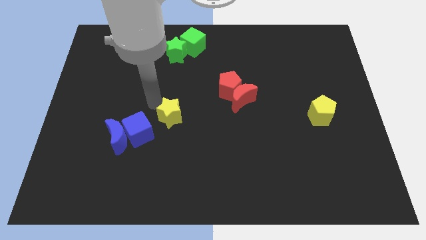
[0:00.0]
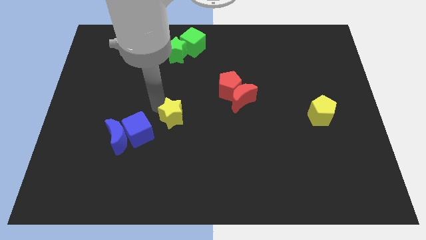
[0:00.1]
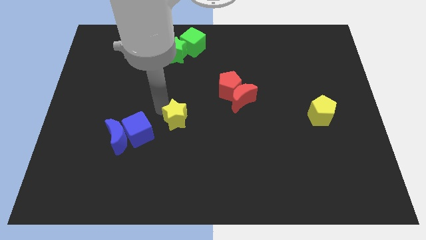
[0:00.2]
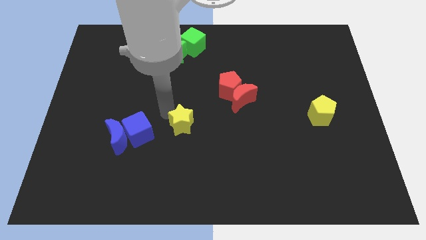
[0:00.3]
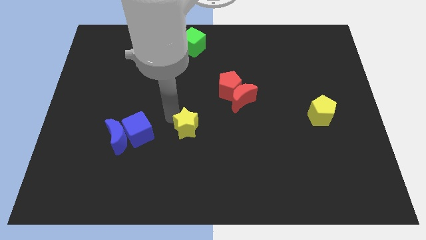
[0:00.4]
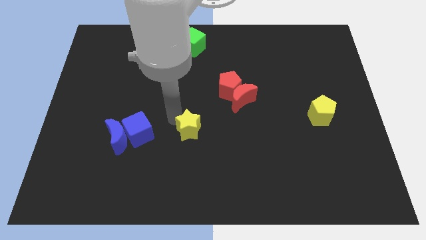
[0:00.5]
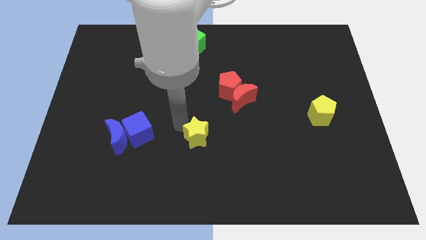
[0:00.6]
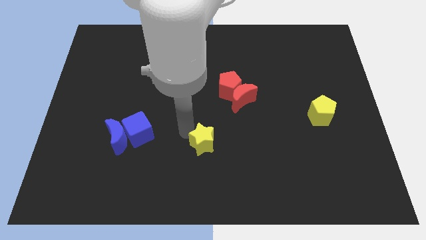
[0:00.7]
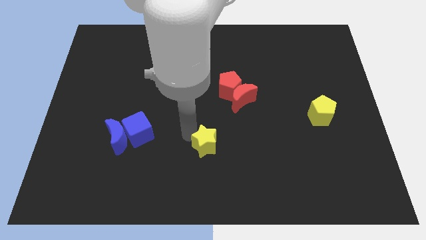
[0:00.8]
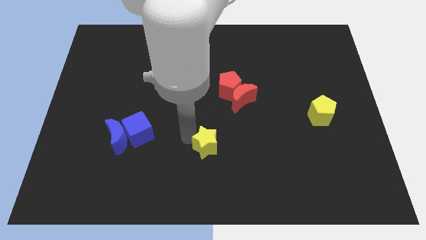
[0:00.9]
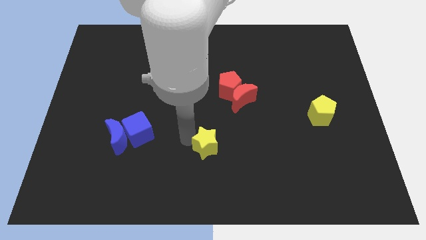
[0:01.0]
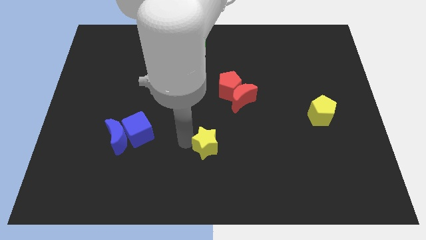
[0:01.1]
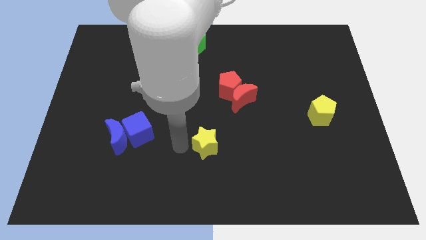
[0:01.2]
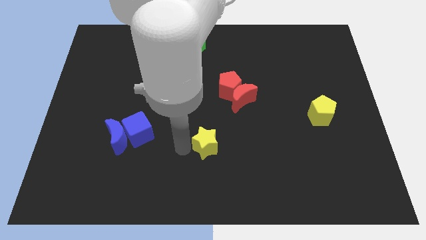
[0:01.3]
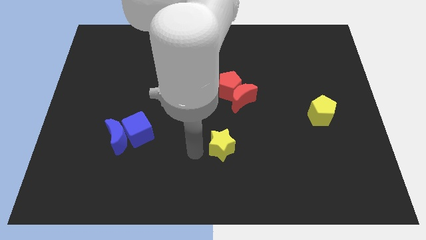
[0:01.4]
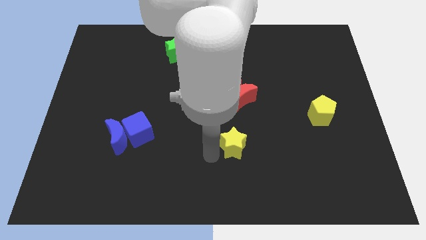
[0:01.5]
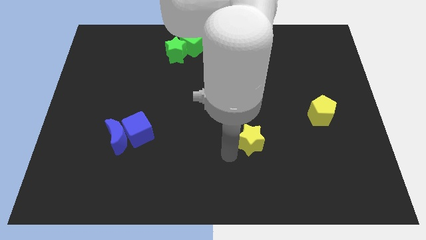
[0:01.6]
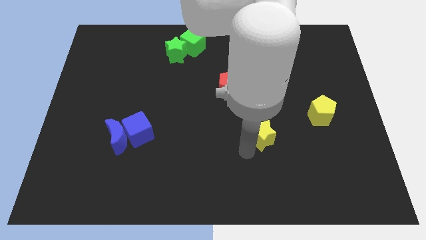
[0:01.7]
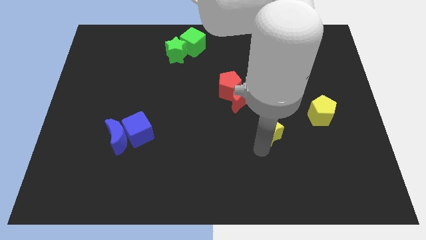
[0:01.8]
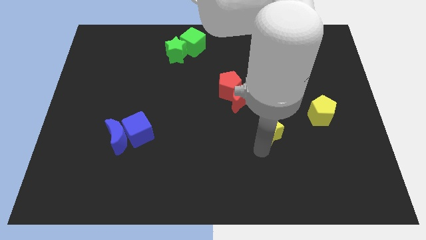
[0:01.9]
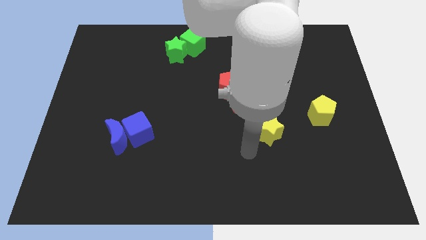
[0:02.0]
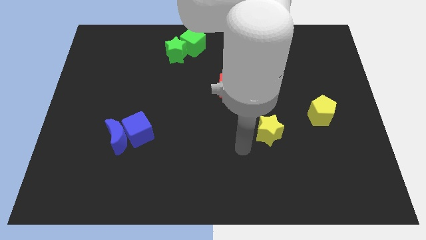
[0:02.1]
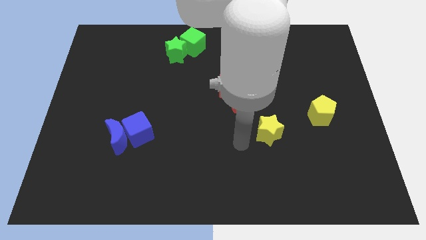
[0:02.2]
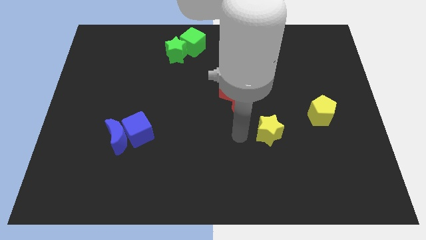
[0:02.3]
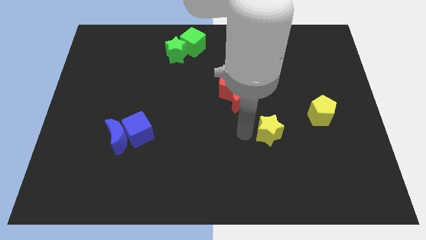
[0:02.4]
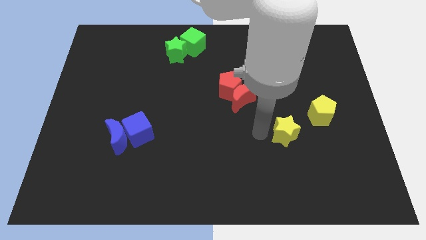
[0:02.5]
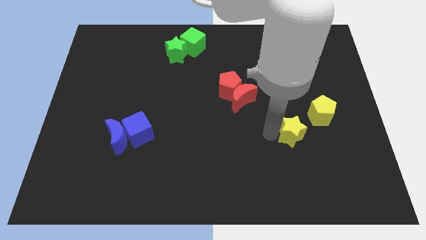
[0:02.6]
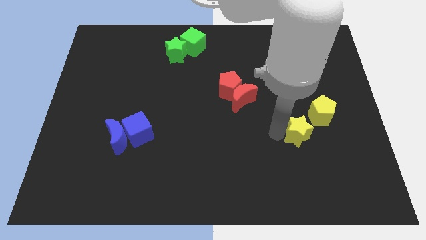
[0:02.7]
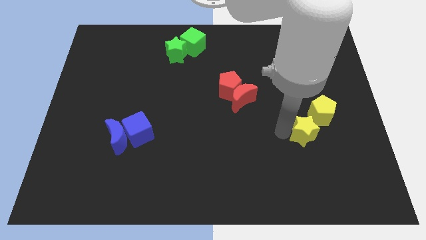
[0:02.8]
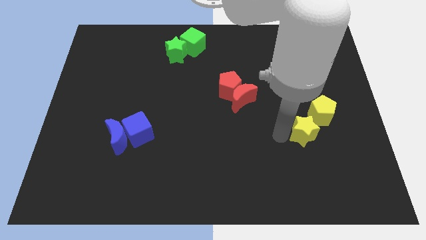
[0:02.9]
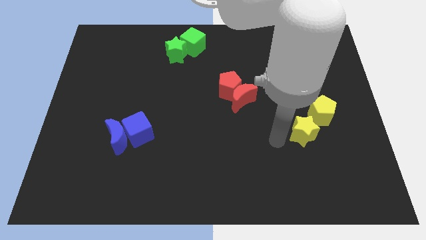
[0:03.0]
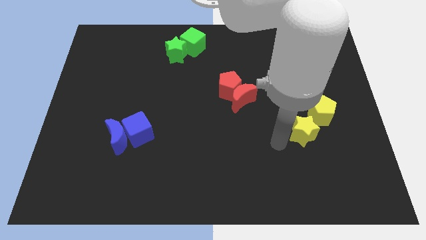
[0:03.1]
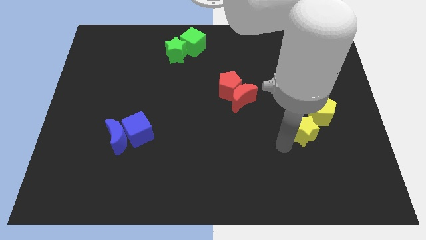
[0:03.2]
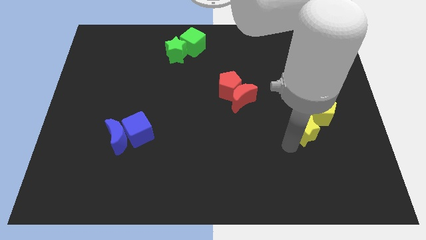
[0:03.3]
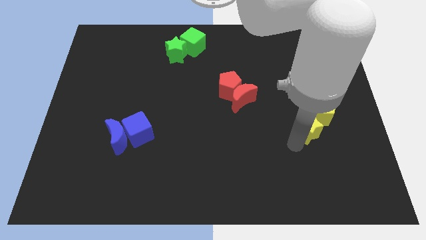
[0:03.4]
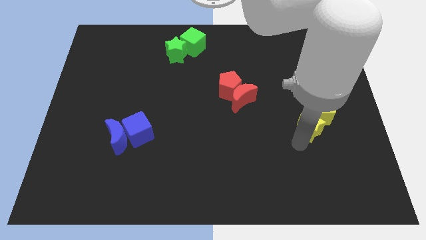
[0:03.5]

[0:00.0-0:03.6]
move yellow star into the yellow pentagon

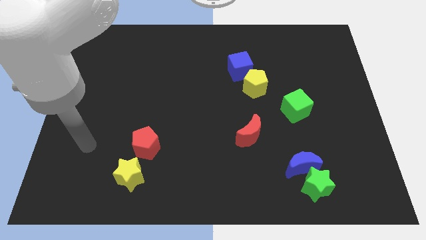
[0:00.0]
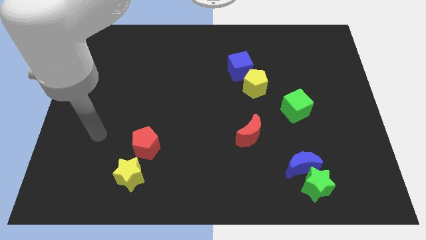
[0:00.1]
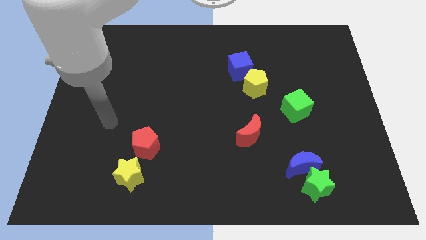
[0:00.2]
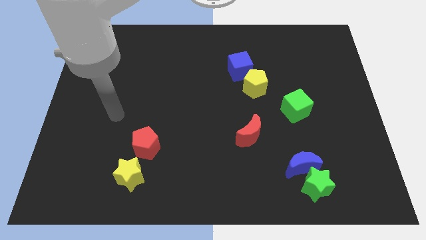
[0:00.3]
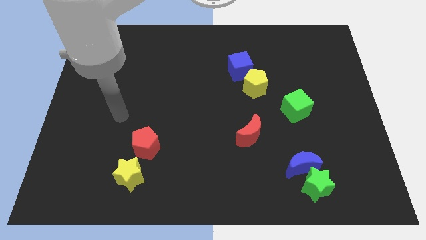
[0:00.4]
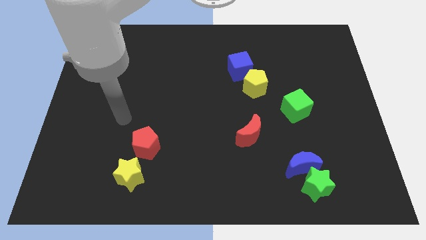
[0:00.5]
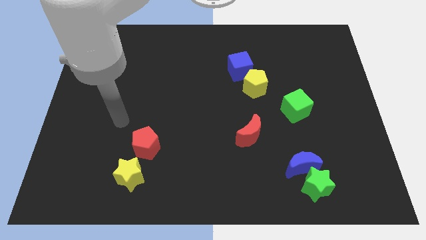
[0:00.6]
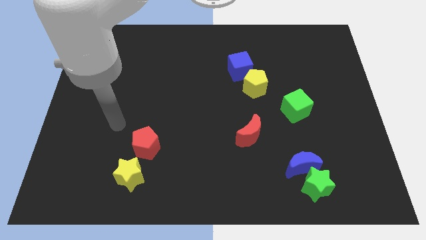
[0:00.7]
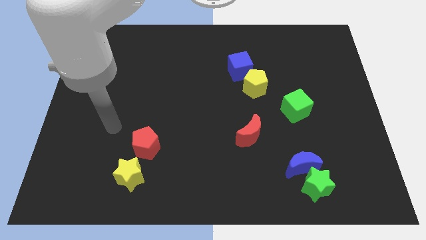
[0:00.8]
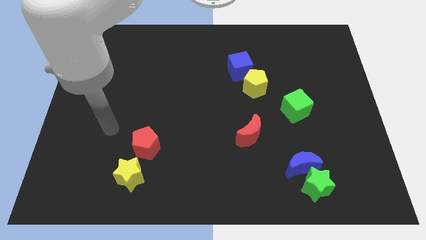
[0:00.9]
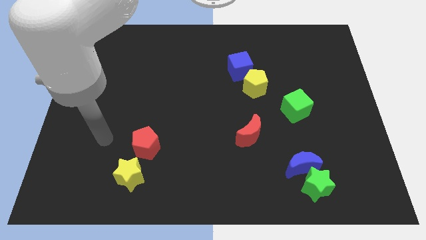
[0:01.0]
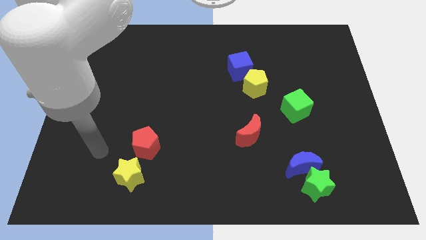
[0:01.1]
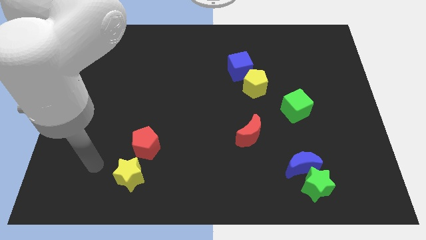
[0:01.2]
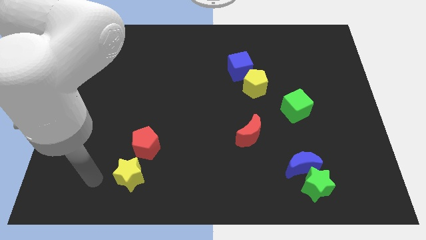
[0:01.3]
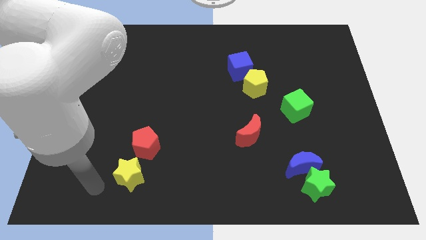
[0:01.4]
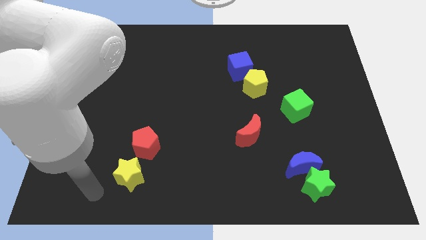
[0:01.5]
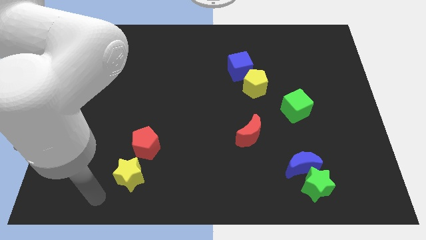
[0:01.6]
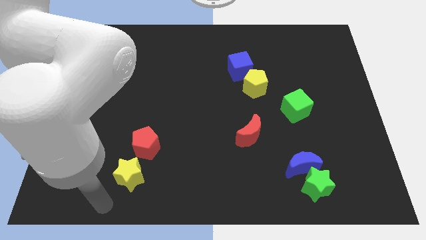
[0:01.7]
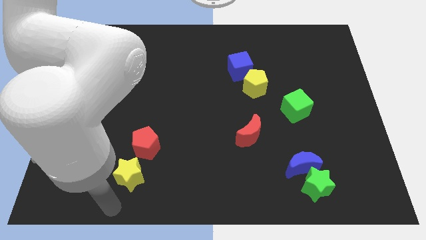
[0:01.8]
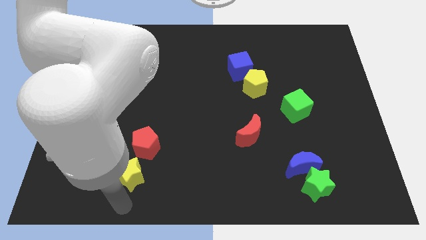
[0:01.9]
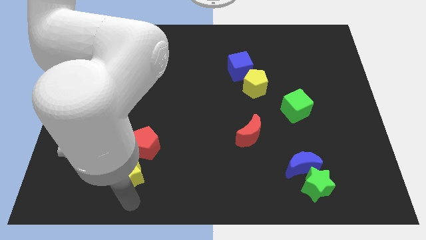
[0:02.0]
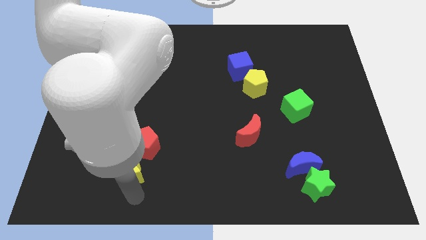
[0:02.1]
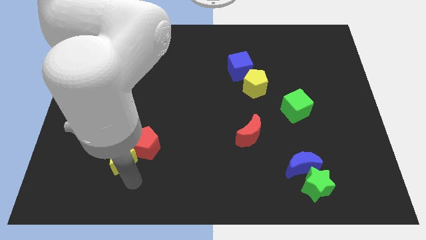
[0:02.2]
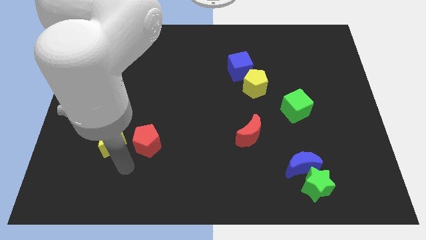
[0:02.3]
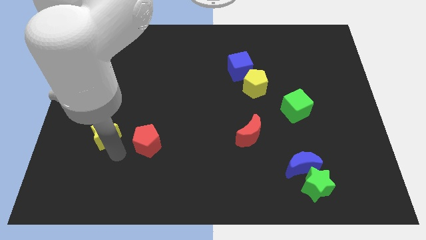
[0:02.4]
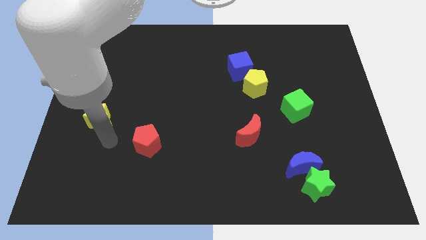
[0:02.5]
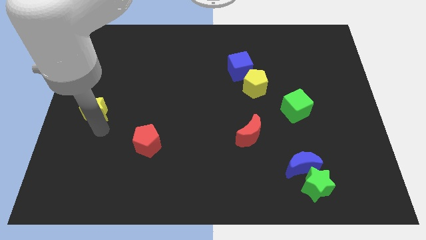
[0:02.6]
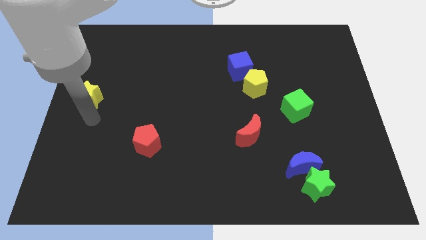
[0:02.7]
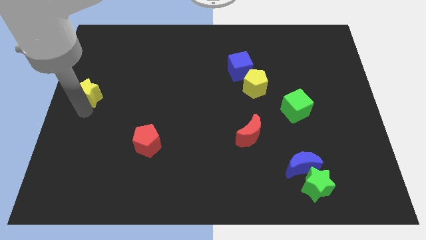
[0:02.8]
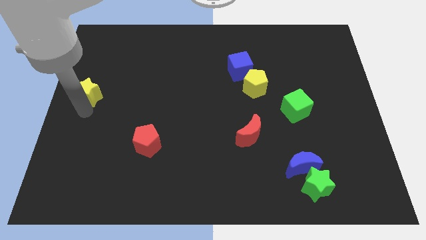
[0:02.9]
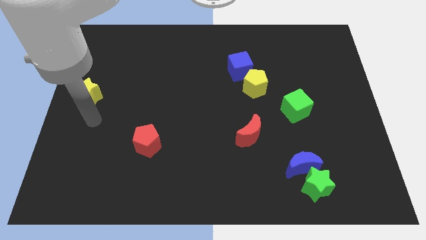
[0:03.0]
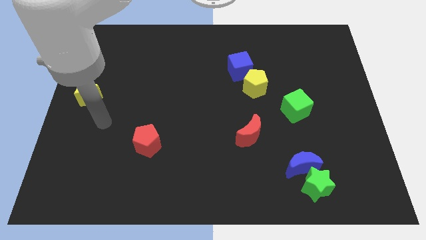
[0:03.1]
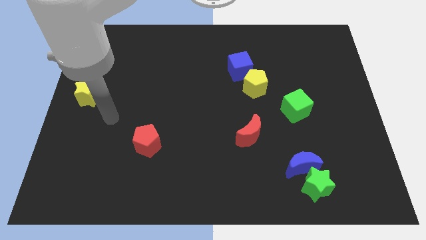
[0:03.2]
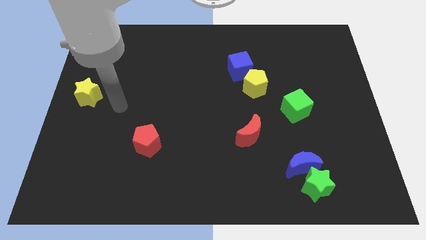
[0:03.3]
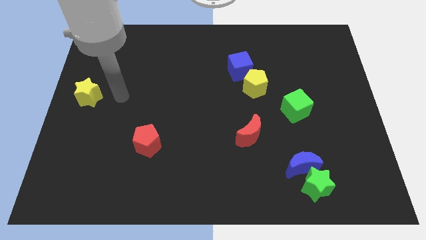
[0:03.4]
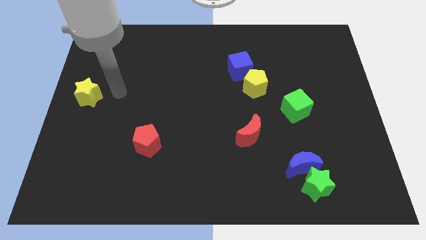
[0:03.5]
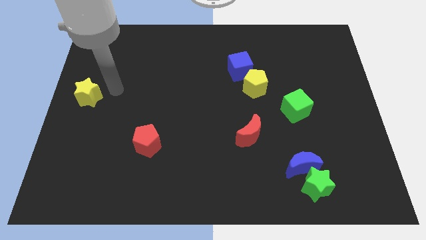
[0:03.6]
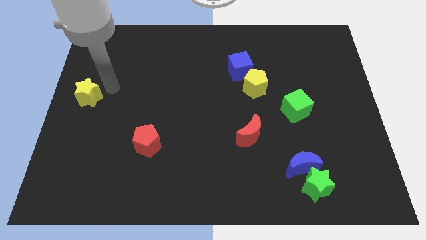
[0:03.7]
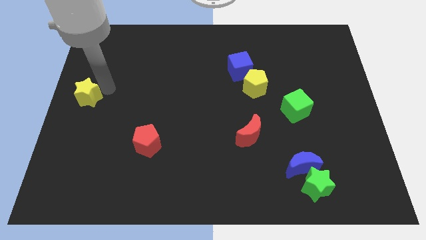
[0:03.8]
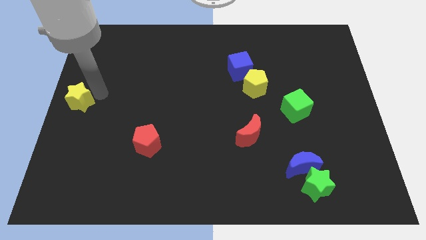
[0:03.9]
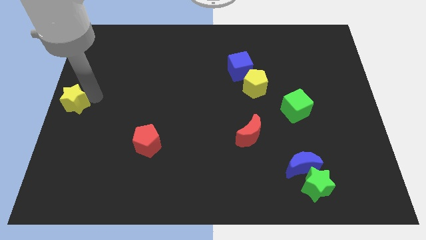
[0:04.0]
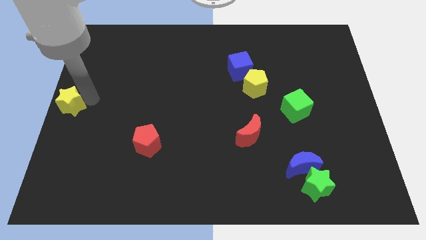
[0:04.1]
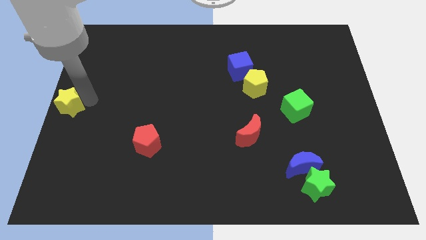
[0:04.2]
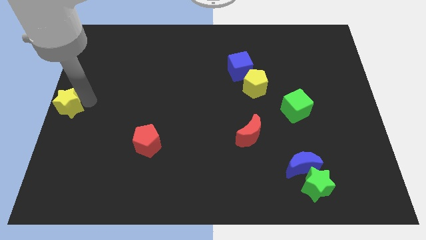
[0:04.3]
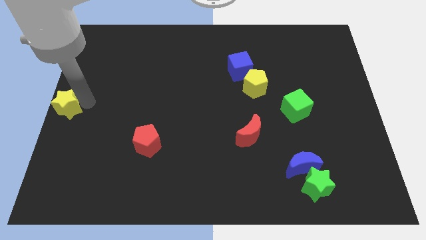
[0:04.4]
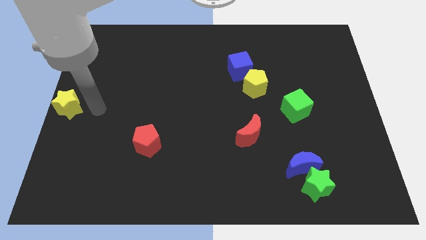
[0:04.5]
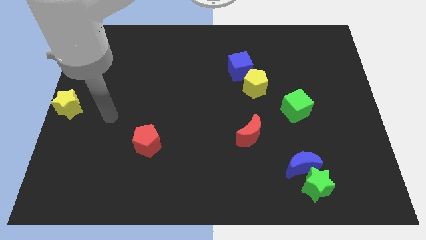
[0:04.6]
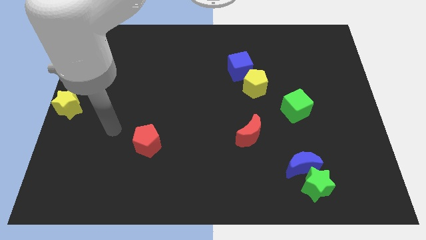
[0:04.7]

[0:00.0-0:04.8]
move the yellow star to the center left of the board

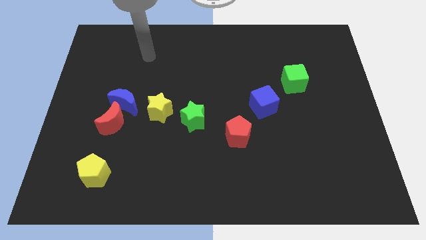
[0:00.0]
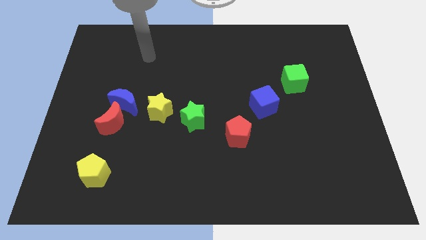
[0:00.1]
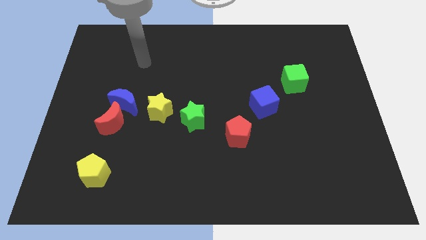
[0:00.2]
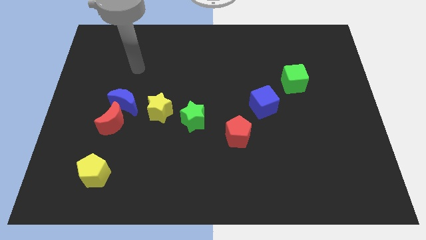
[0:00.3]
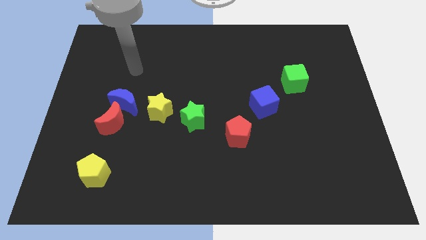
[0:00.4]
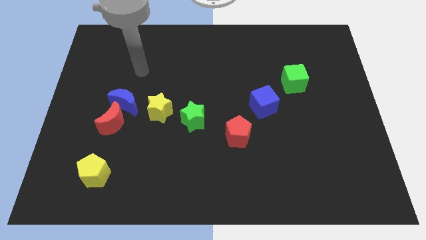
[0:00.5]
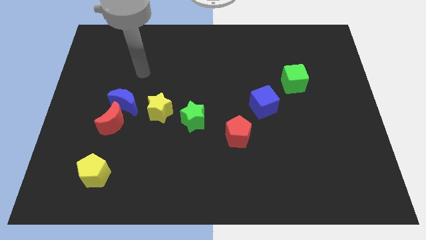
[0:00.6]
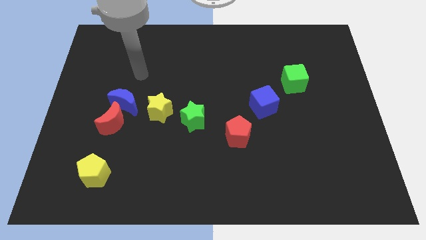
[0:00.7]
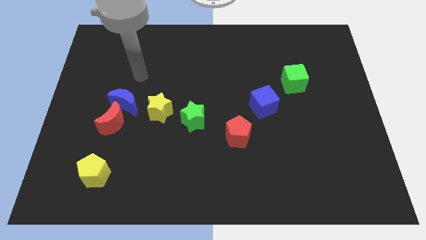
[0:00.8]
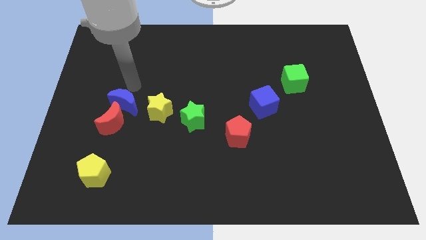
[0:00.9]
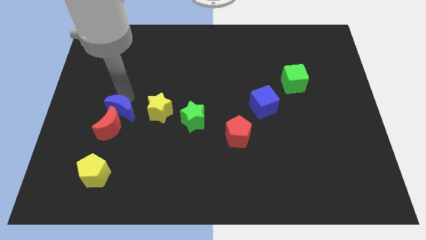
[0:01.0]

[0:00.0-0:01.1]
tap the top side of the blue moon
